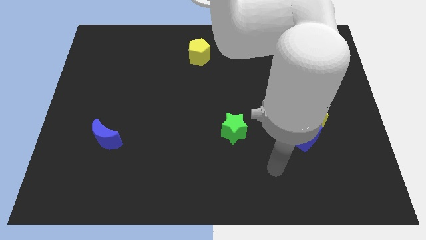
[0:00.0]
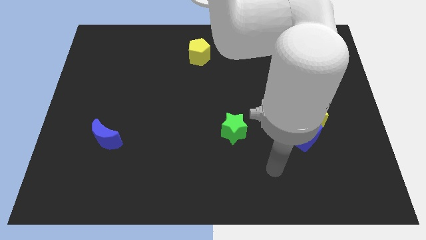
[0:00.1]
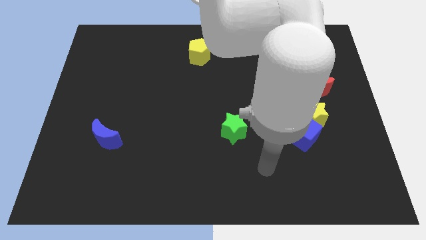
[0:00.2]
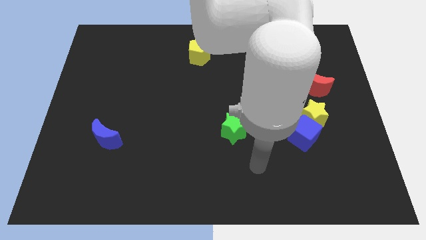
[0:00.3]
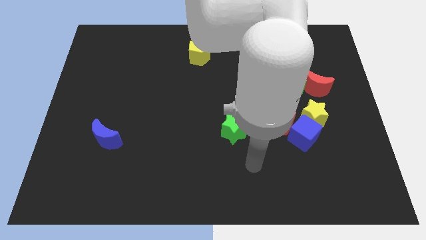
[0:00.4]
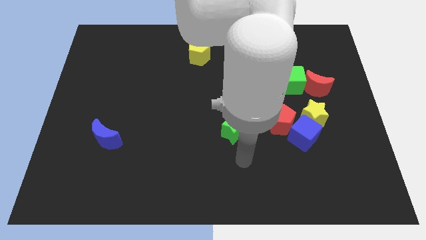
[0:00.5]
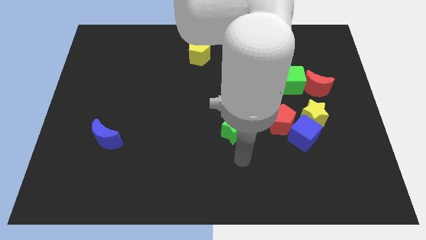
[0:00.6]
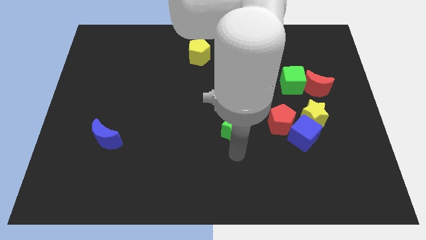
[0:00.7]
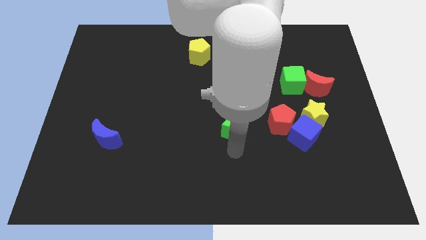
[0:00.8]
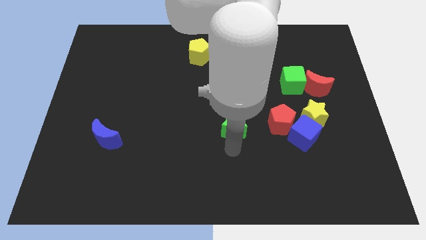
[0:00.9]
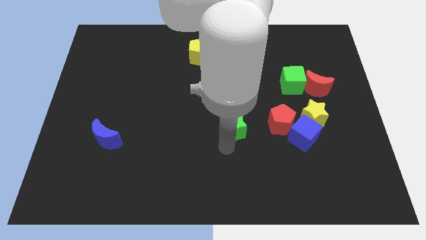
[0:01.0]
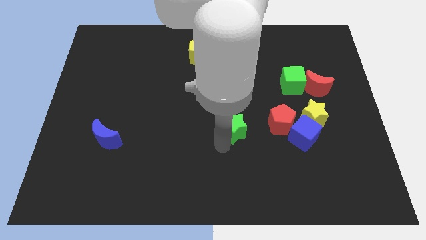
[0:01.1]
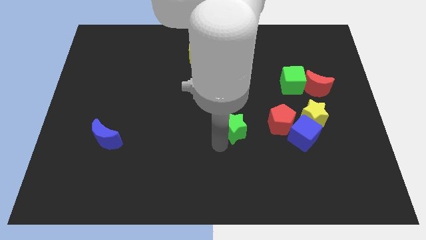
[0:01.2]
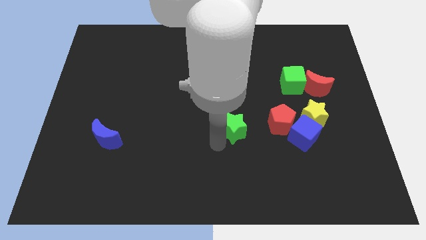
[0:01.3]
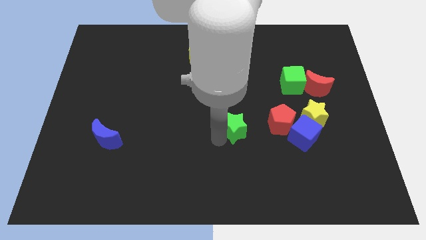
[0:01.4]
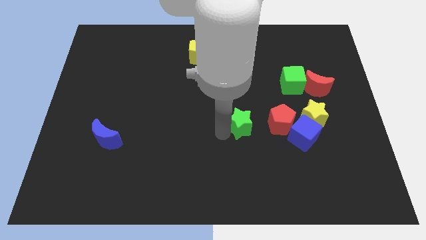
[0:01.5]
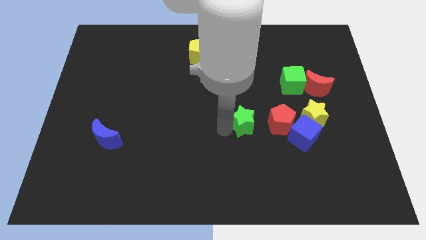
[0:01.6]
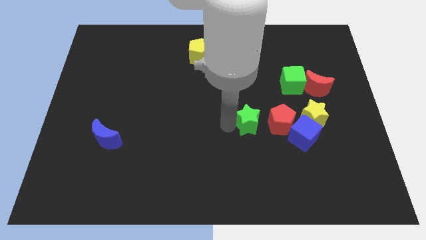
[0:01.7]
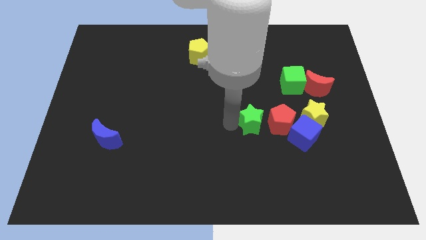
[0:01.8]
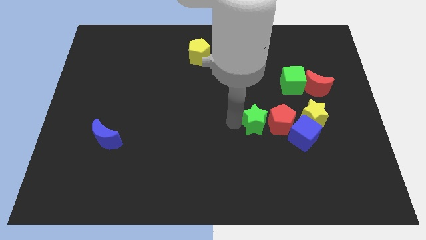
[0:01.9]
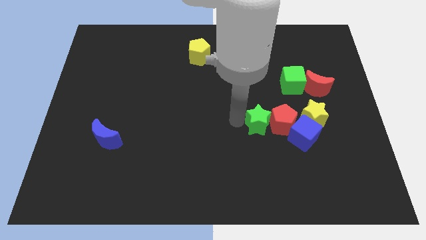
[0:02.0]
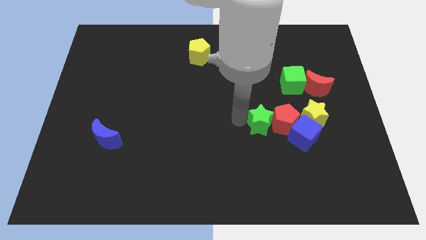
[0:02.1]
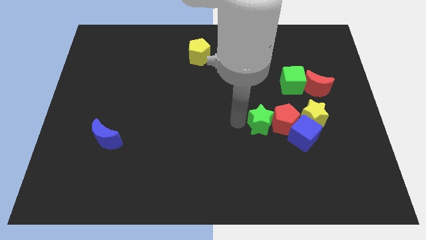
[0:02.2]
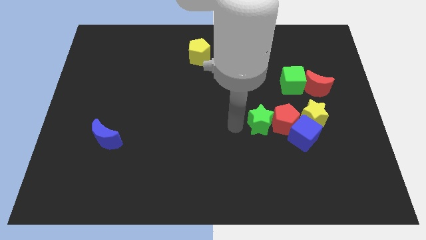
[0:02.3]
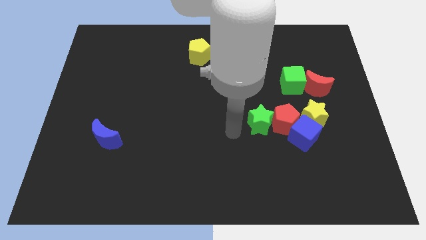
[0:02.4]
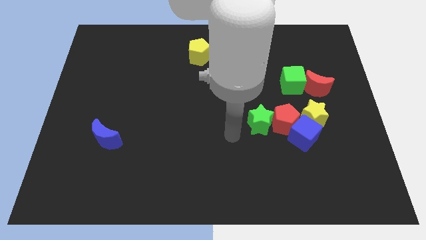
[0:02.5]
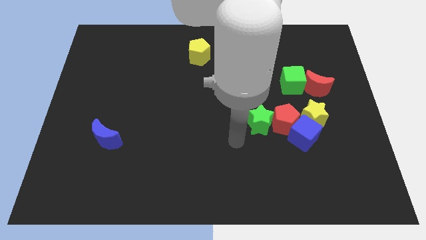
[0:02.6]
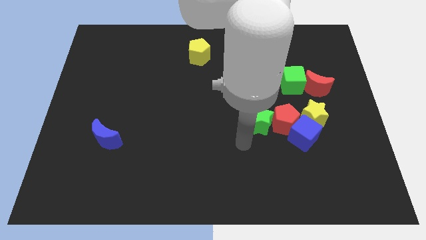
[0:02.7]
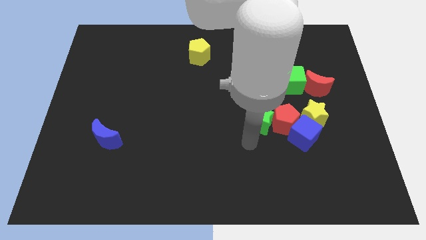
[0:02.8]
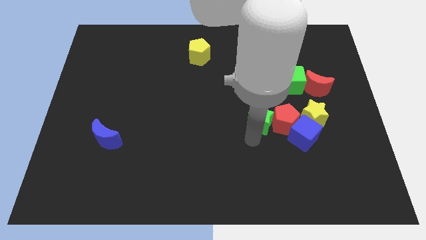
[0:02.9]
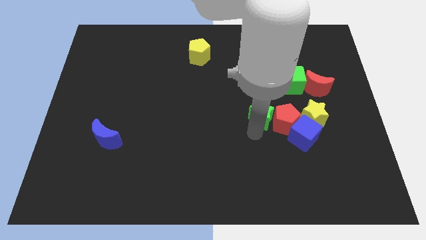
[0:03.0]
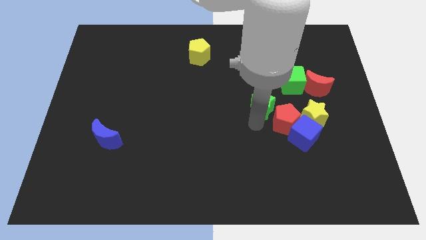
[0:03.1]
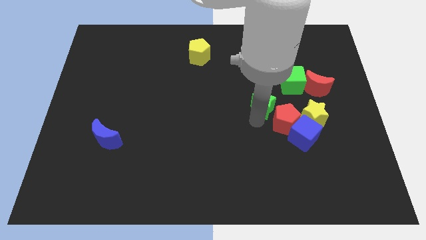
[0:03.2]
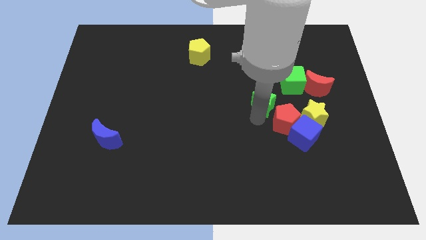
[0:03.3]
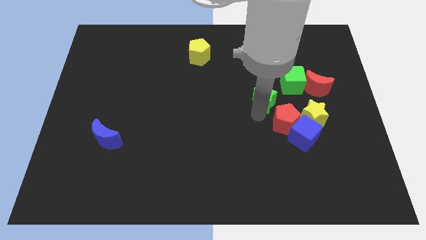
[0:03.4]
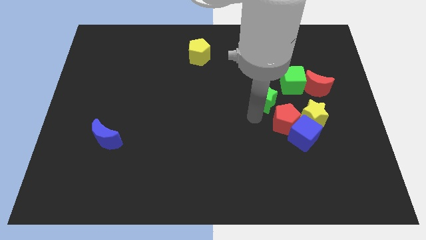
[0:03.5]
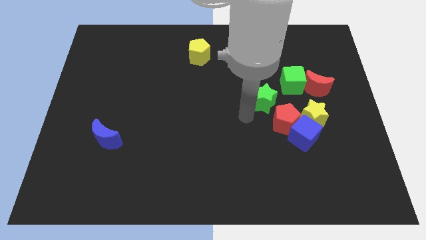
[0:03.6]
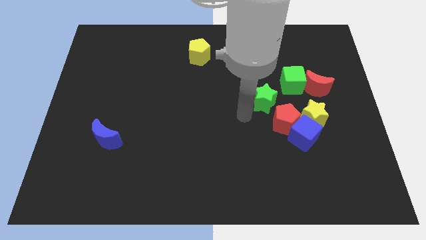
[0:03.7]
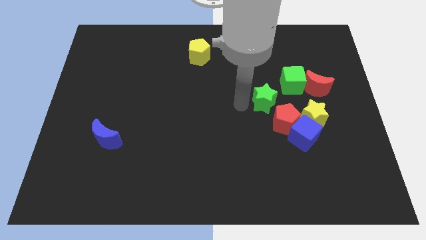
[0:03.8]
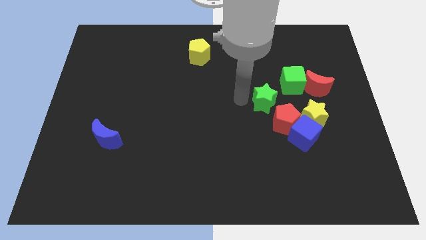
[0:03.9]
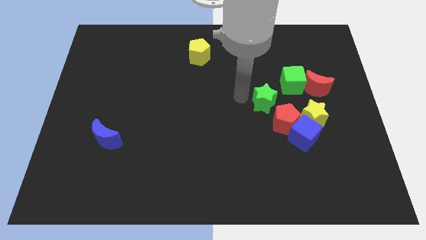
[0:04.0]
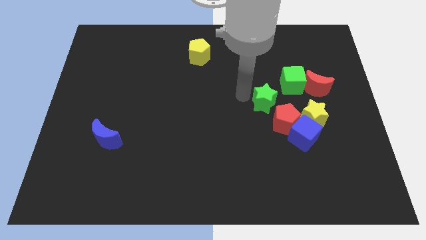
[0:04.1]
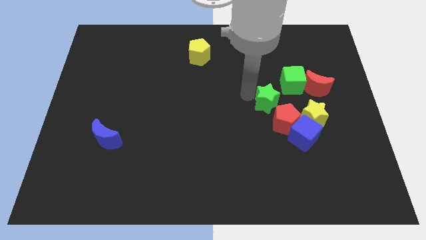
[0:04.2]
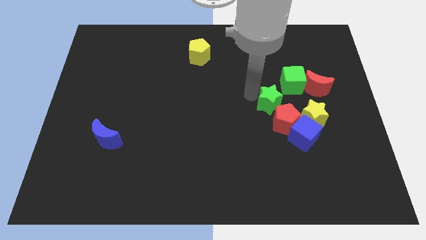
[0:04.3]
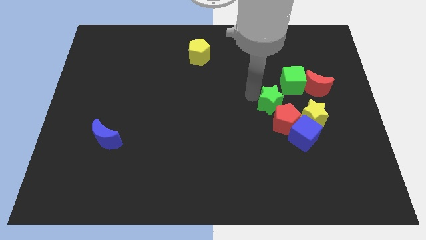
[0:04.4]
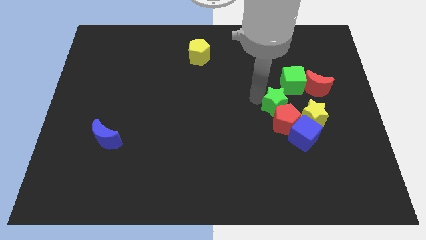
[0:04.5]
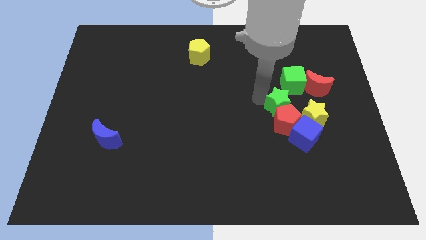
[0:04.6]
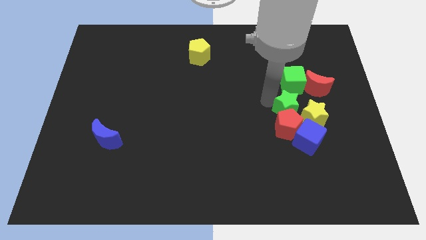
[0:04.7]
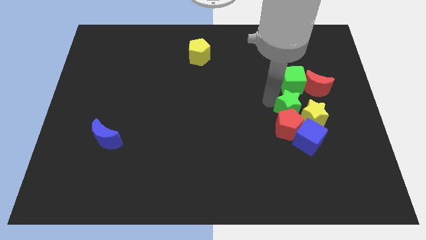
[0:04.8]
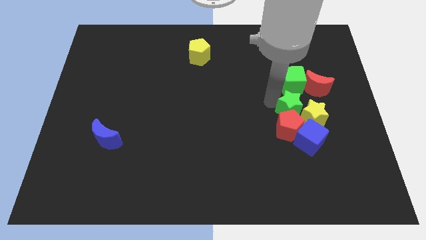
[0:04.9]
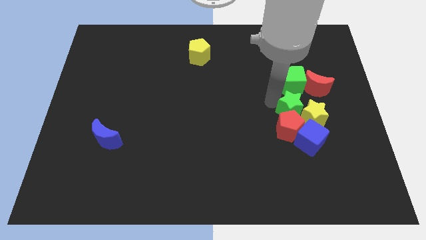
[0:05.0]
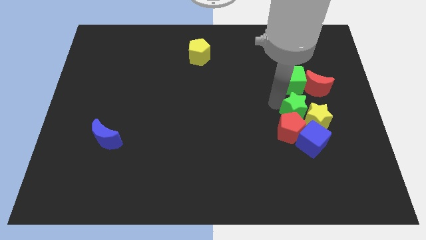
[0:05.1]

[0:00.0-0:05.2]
move the green star to the yellow star

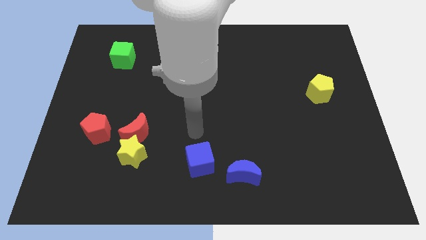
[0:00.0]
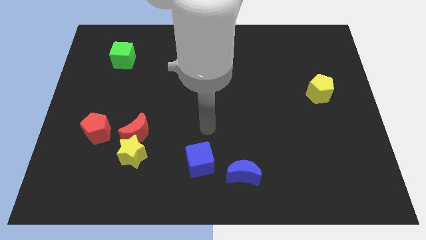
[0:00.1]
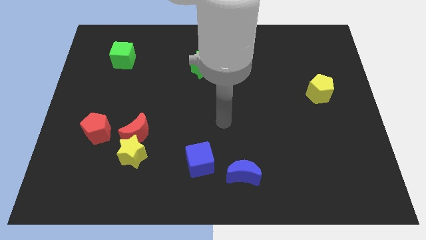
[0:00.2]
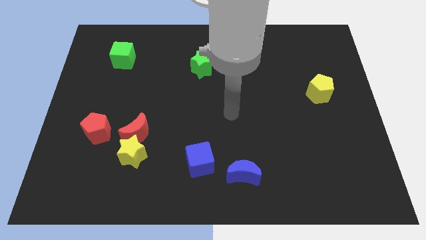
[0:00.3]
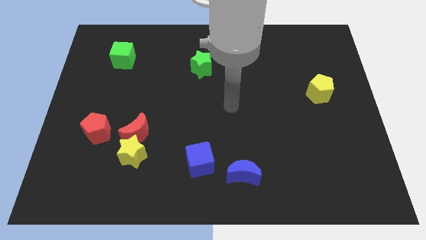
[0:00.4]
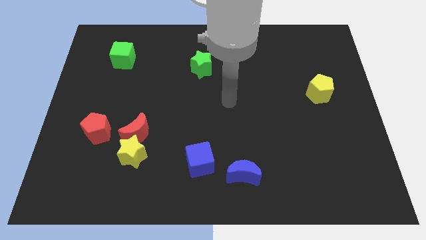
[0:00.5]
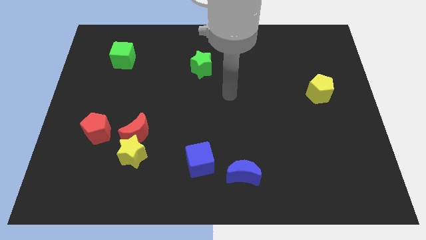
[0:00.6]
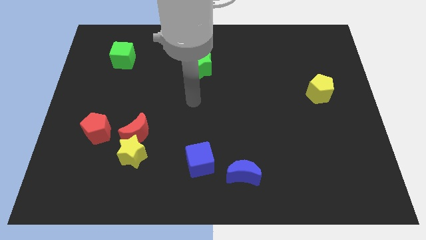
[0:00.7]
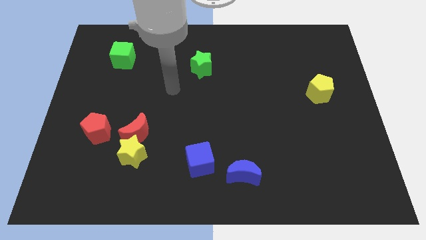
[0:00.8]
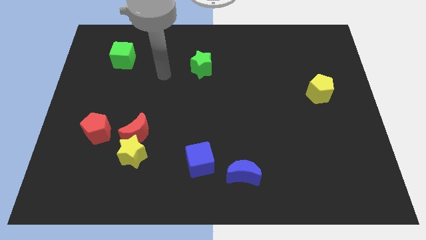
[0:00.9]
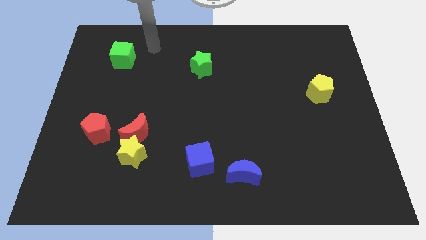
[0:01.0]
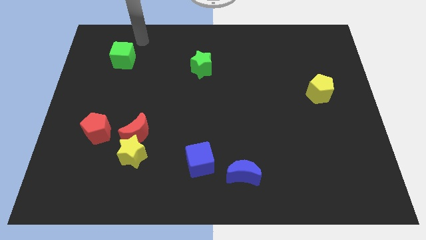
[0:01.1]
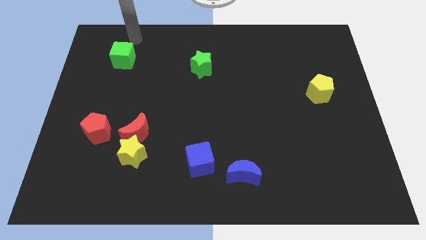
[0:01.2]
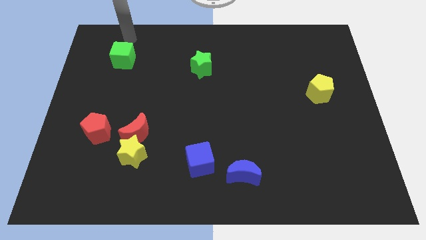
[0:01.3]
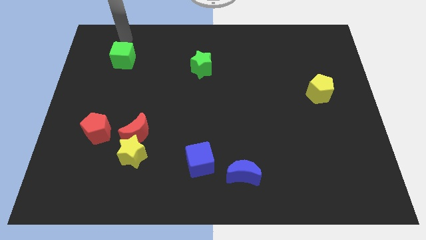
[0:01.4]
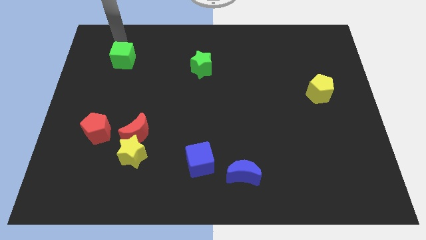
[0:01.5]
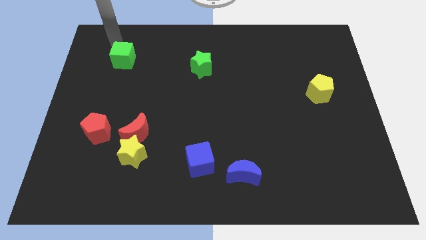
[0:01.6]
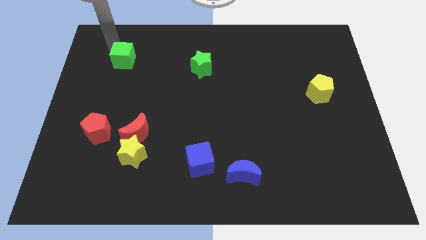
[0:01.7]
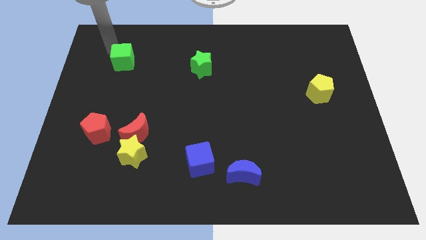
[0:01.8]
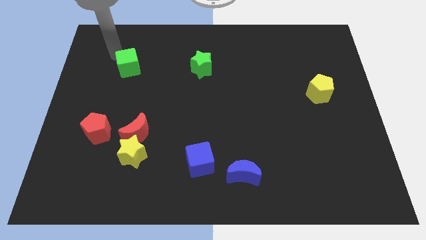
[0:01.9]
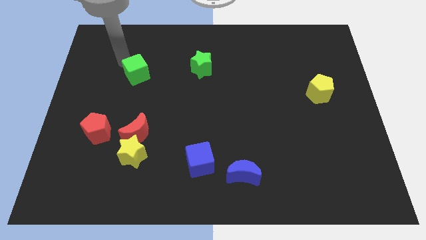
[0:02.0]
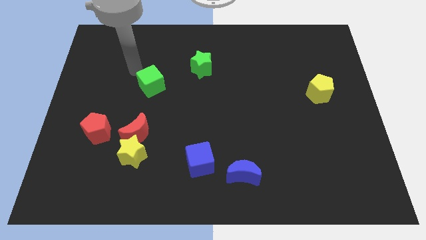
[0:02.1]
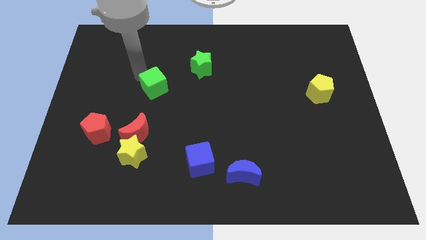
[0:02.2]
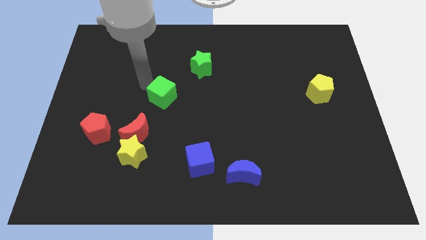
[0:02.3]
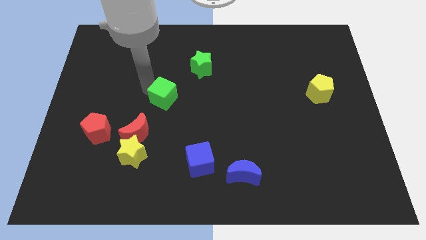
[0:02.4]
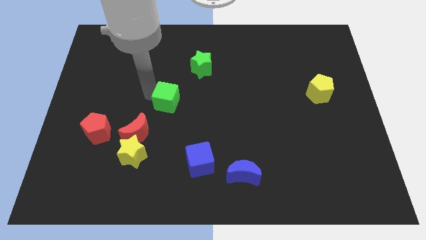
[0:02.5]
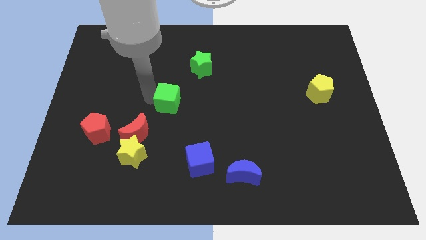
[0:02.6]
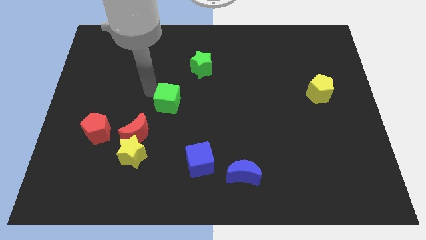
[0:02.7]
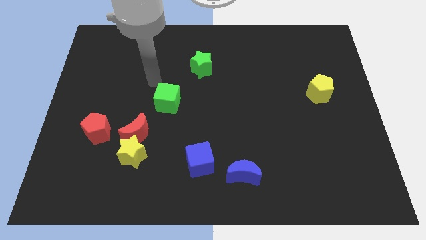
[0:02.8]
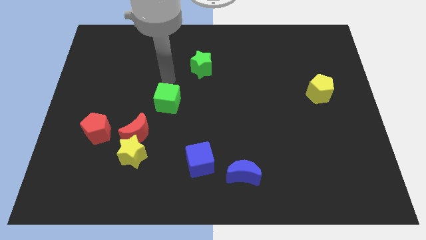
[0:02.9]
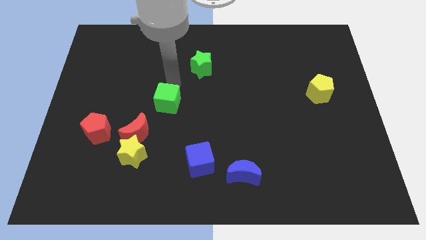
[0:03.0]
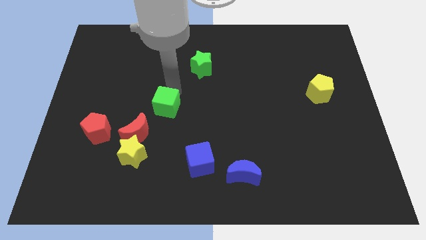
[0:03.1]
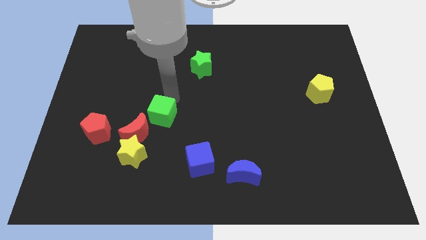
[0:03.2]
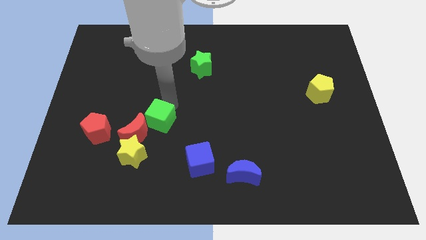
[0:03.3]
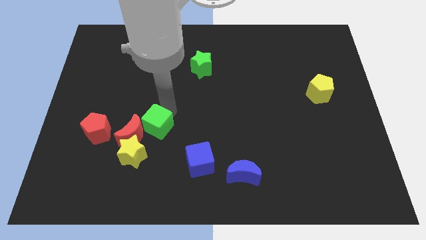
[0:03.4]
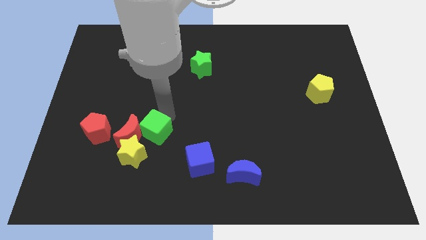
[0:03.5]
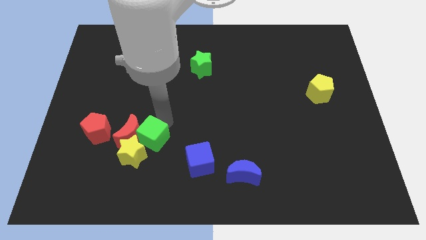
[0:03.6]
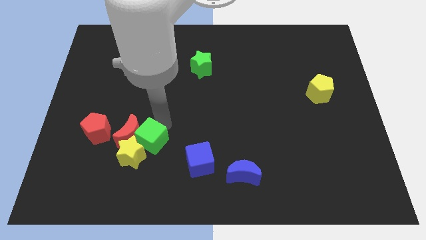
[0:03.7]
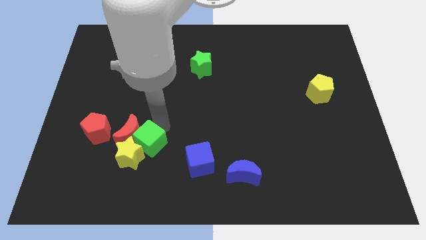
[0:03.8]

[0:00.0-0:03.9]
slide the green cube next to the yellow star
